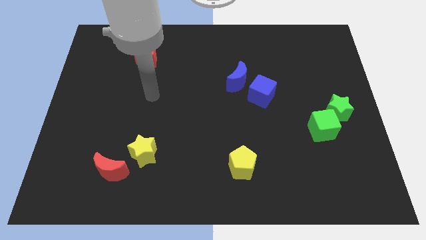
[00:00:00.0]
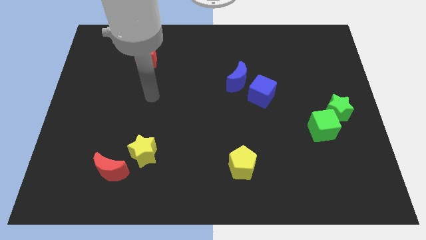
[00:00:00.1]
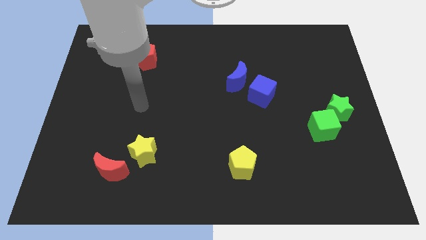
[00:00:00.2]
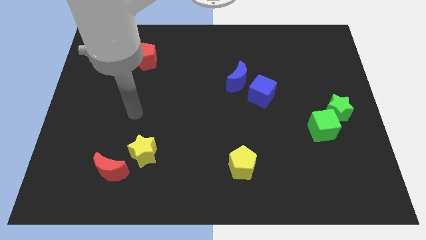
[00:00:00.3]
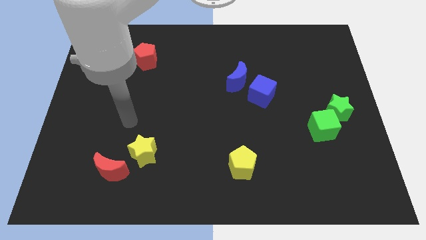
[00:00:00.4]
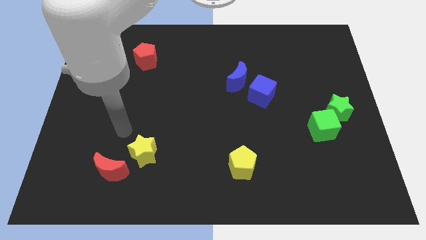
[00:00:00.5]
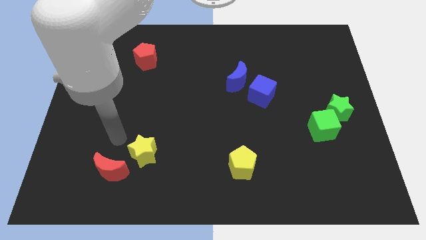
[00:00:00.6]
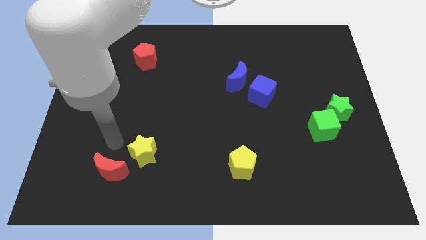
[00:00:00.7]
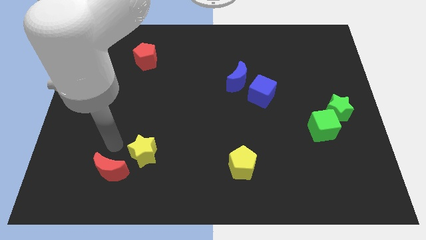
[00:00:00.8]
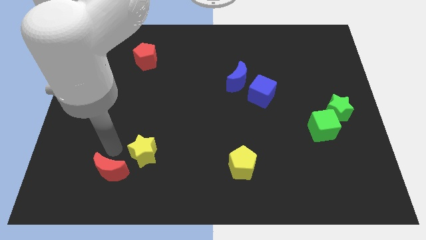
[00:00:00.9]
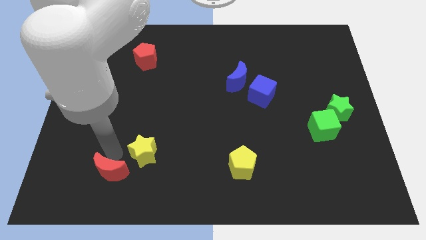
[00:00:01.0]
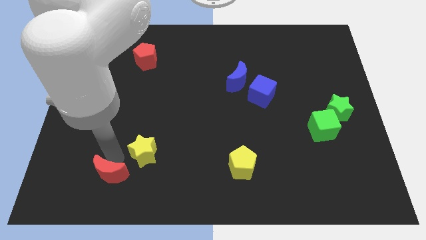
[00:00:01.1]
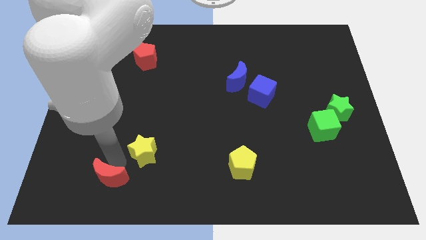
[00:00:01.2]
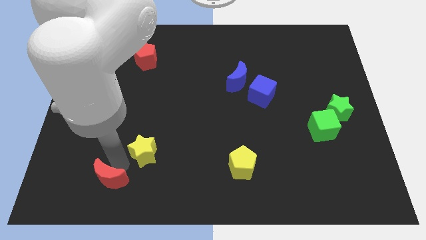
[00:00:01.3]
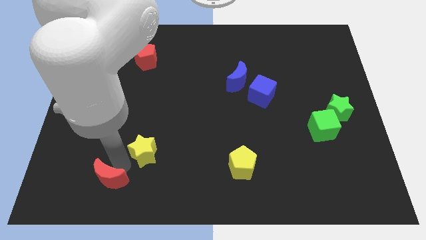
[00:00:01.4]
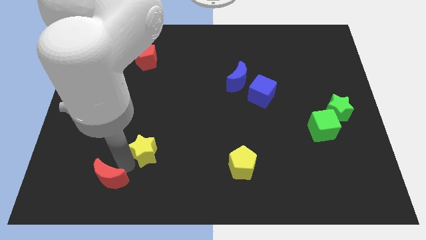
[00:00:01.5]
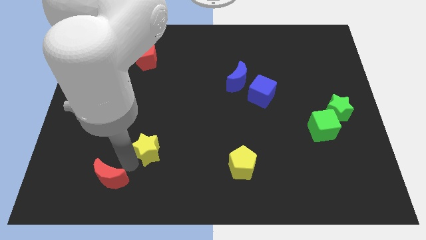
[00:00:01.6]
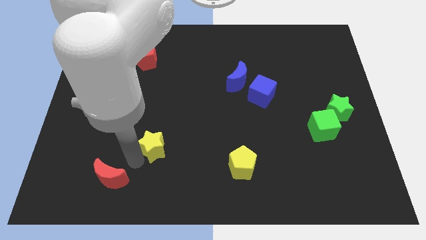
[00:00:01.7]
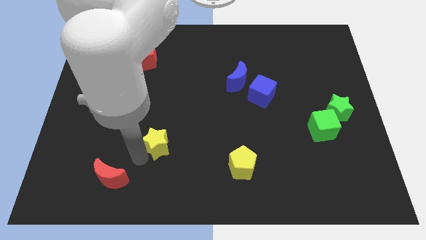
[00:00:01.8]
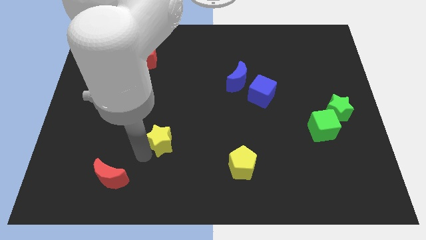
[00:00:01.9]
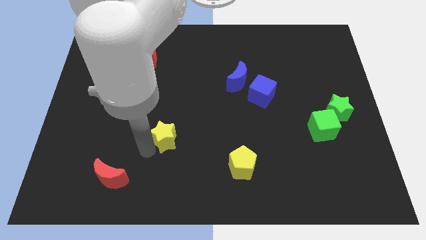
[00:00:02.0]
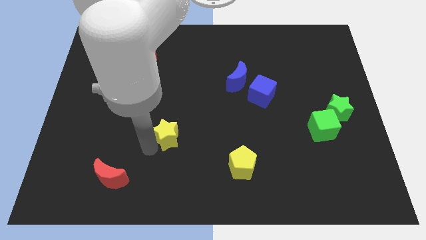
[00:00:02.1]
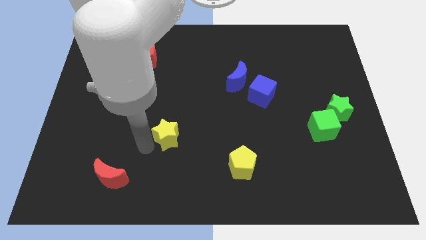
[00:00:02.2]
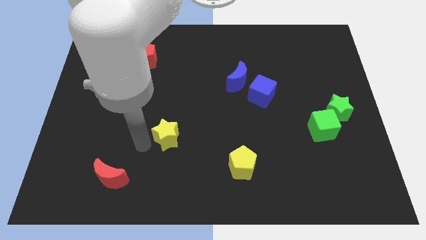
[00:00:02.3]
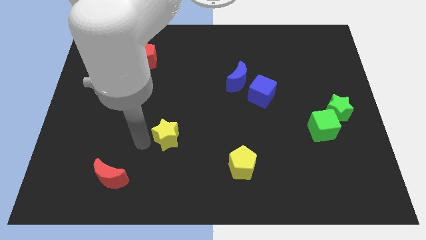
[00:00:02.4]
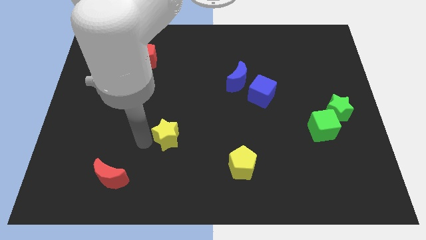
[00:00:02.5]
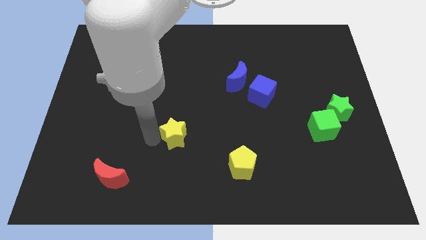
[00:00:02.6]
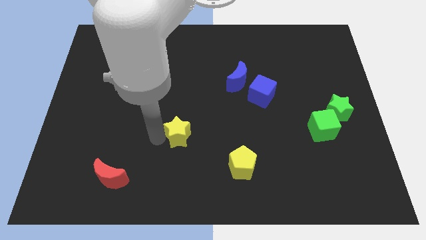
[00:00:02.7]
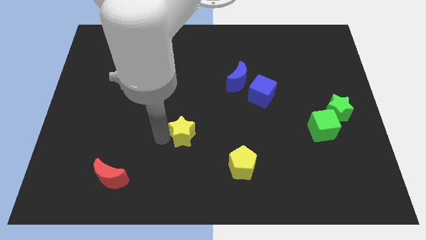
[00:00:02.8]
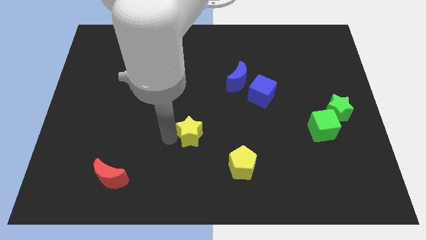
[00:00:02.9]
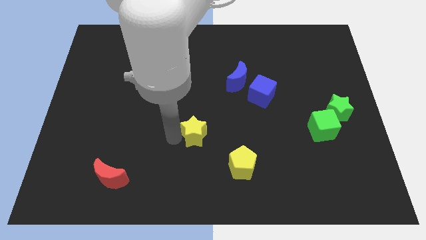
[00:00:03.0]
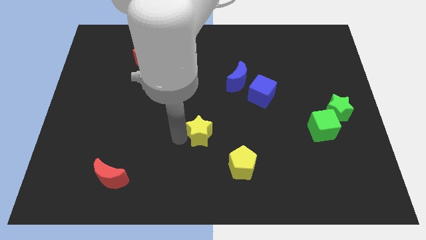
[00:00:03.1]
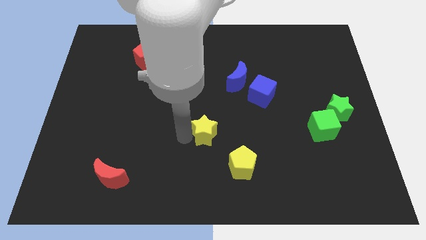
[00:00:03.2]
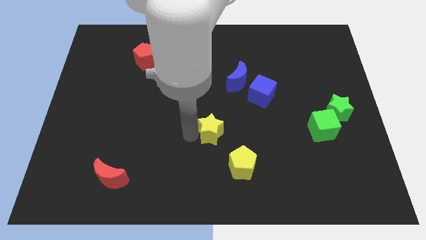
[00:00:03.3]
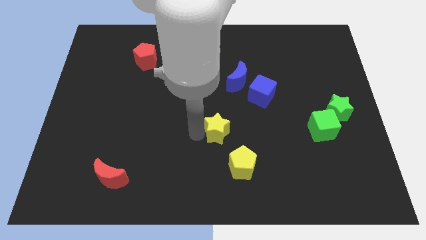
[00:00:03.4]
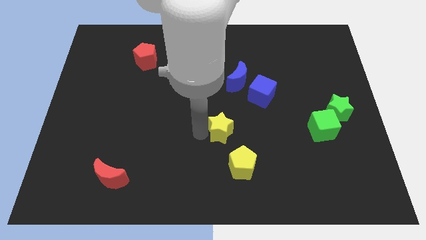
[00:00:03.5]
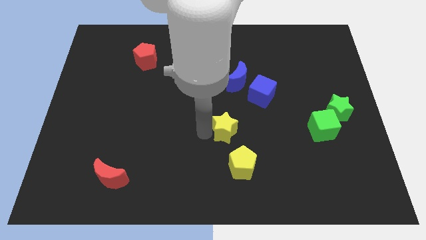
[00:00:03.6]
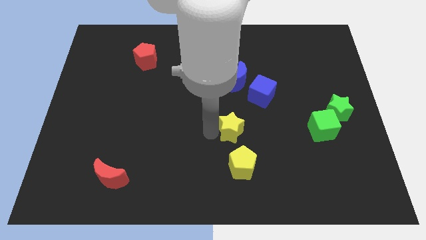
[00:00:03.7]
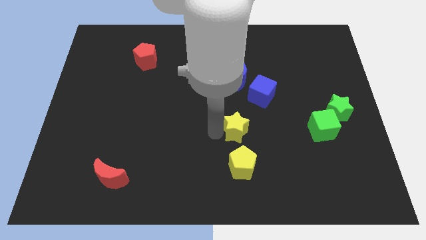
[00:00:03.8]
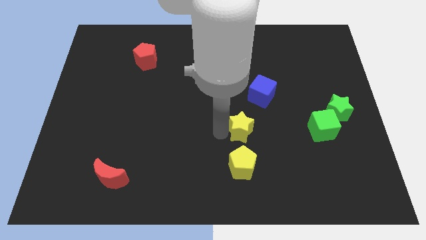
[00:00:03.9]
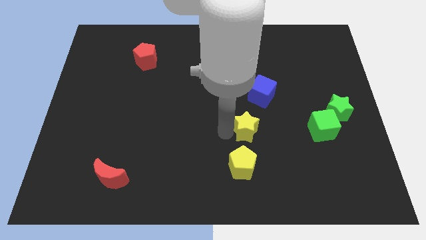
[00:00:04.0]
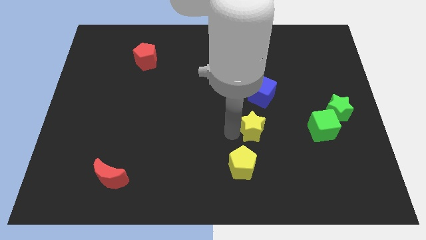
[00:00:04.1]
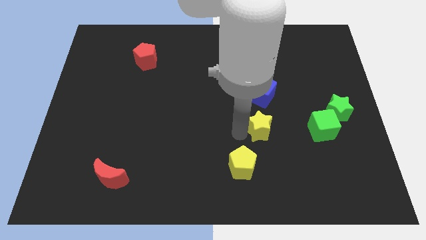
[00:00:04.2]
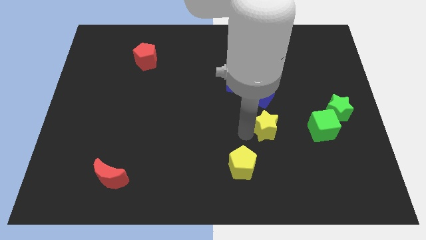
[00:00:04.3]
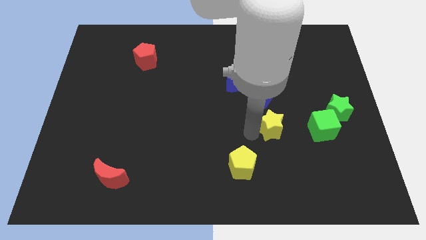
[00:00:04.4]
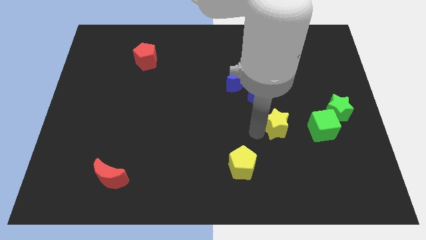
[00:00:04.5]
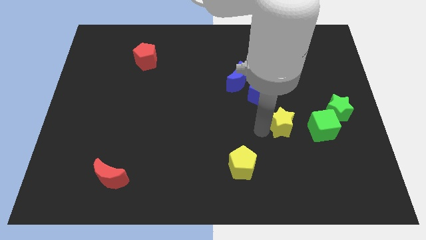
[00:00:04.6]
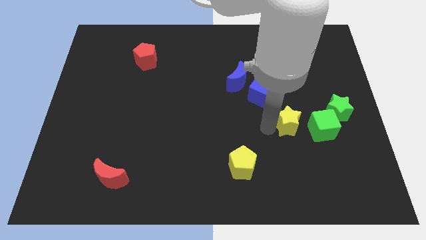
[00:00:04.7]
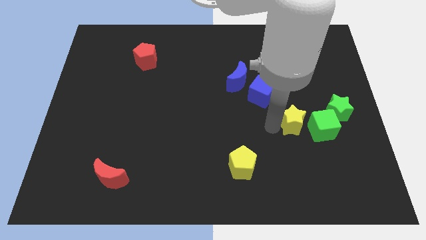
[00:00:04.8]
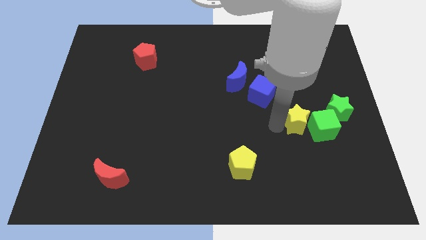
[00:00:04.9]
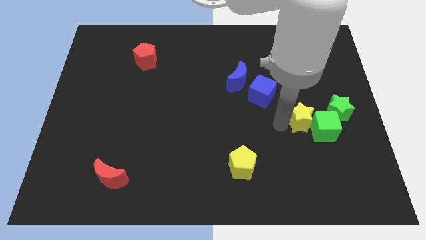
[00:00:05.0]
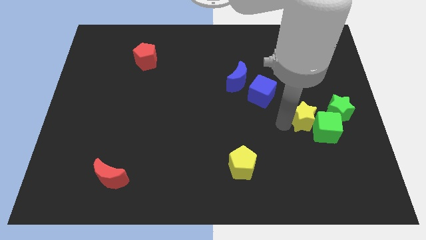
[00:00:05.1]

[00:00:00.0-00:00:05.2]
put the yellow star towards the green cube

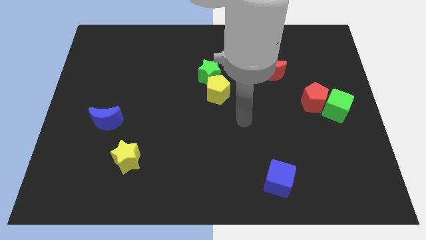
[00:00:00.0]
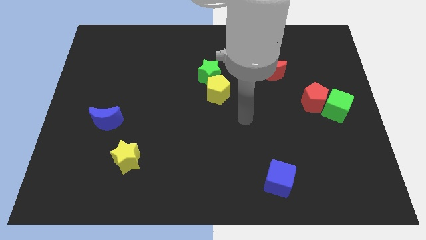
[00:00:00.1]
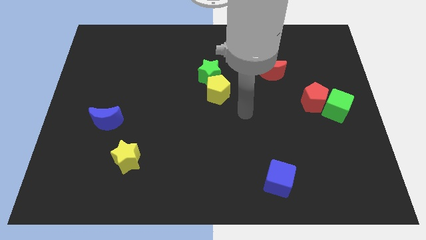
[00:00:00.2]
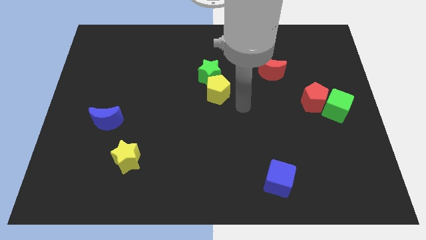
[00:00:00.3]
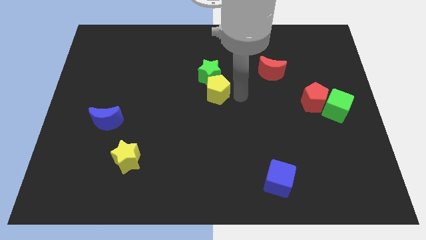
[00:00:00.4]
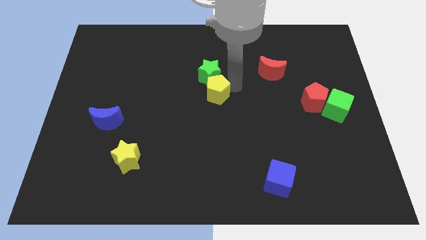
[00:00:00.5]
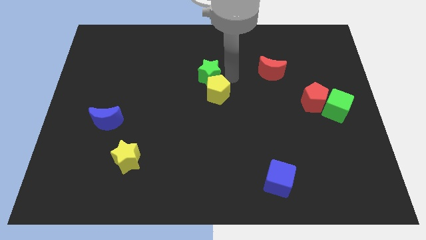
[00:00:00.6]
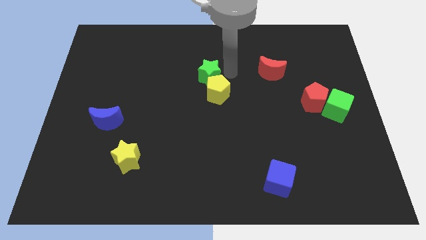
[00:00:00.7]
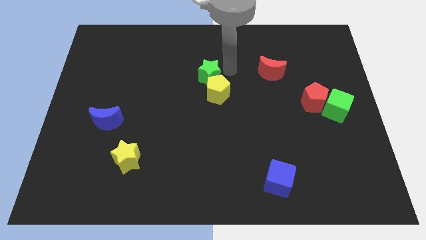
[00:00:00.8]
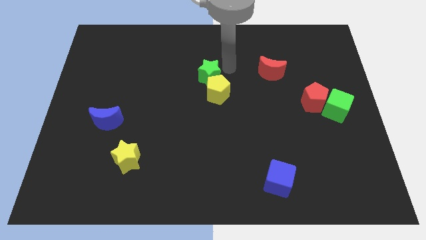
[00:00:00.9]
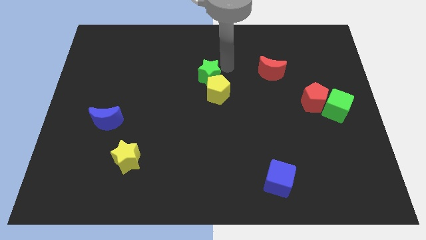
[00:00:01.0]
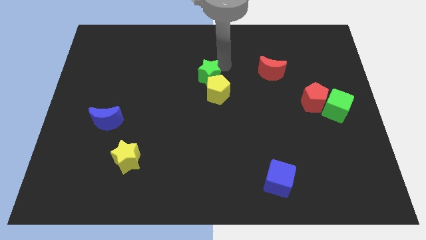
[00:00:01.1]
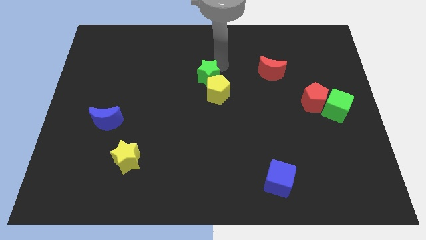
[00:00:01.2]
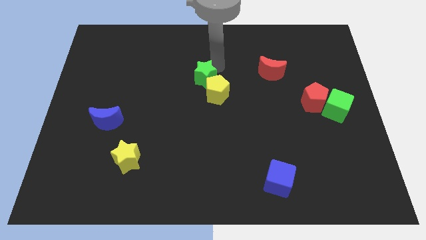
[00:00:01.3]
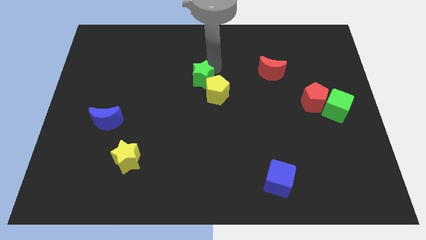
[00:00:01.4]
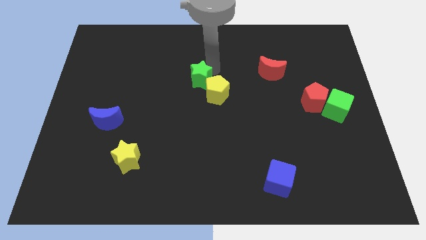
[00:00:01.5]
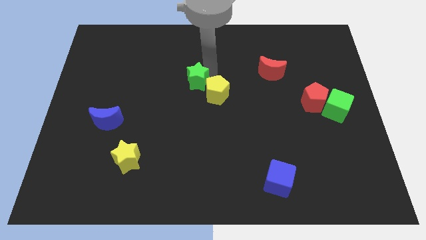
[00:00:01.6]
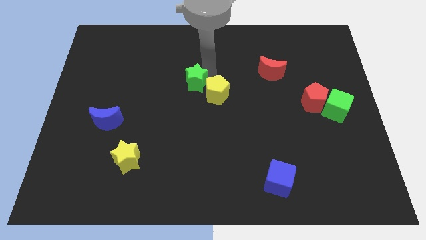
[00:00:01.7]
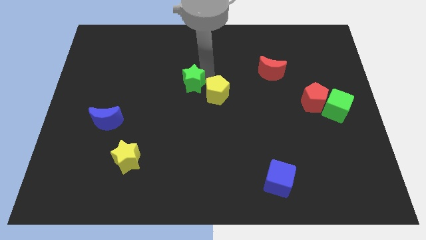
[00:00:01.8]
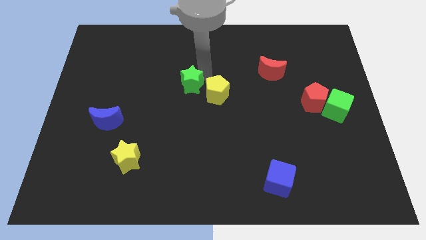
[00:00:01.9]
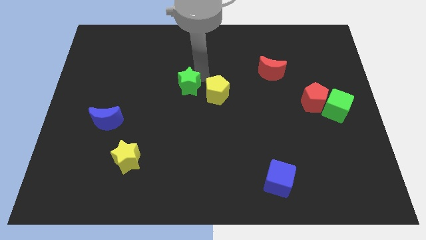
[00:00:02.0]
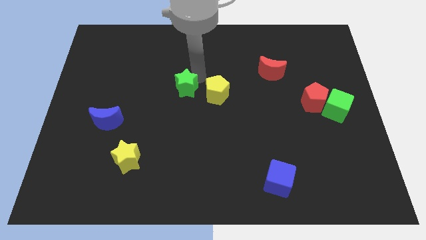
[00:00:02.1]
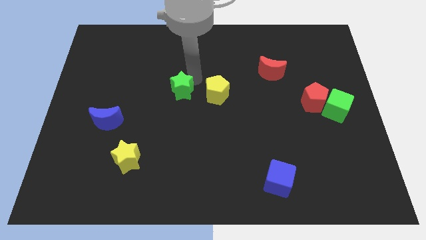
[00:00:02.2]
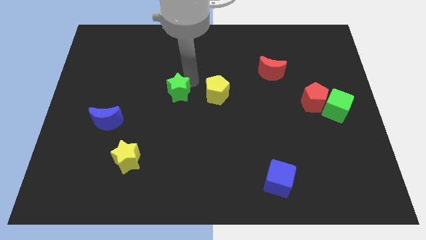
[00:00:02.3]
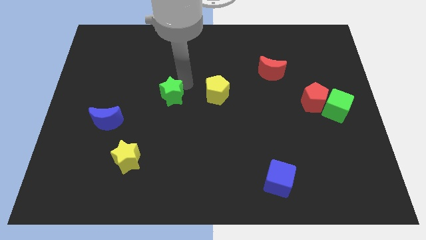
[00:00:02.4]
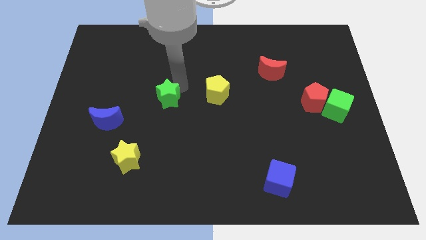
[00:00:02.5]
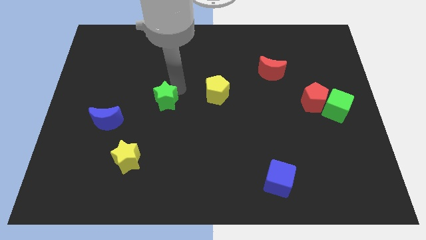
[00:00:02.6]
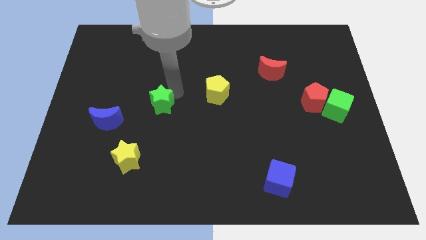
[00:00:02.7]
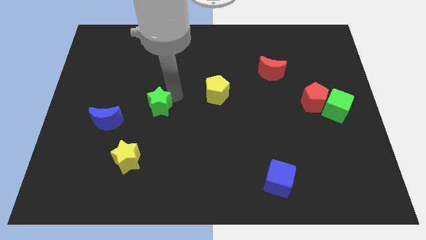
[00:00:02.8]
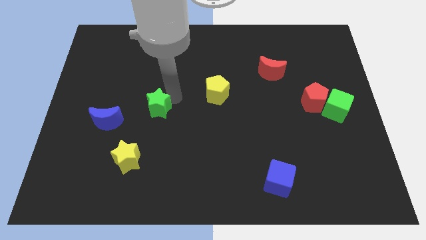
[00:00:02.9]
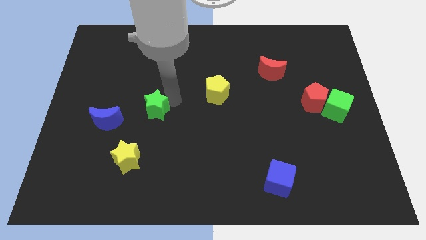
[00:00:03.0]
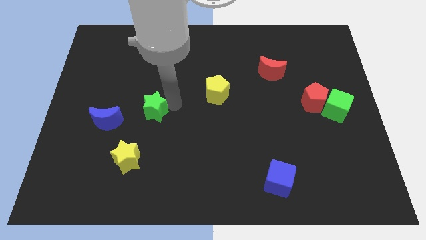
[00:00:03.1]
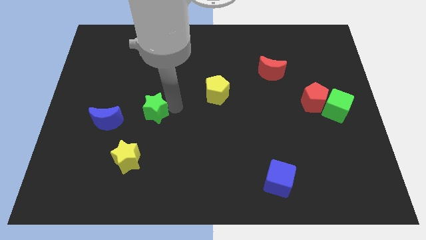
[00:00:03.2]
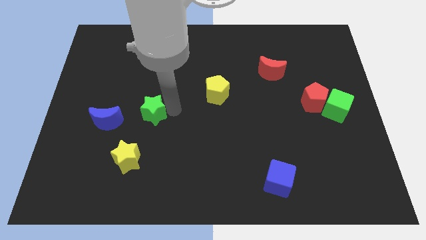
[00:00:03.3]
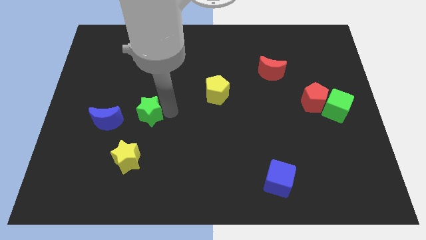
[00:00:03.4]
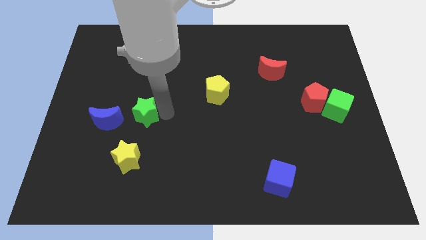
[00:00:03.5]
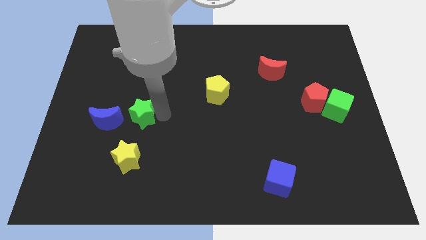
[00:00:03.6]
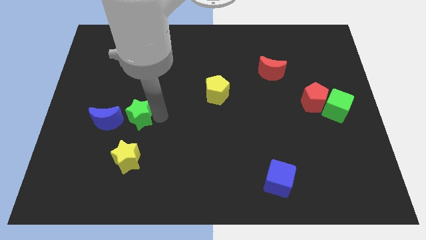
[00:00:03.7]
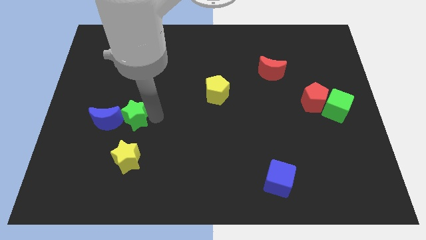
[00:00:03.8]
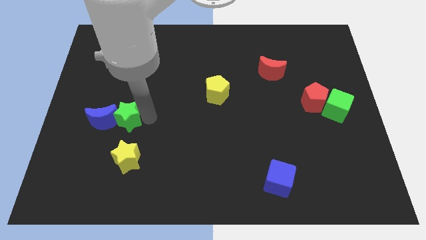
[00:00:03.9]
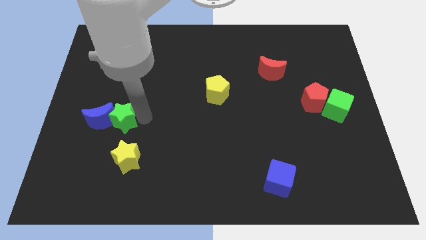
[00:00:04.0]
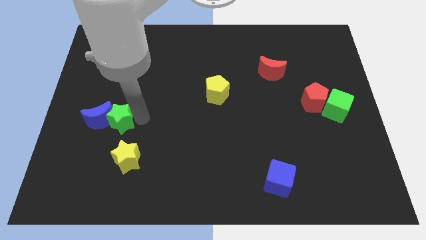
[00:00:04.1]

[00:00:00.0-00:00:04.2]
push the green star to the blue moon
